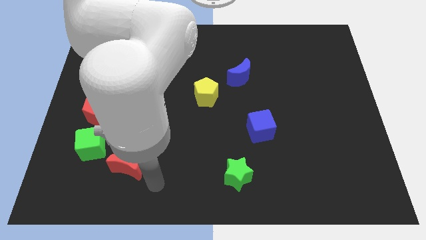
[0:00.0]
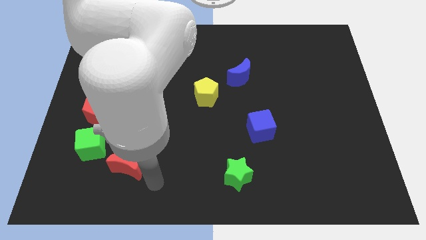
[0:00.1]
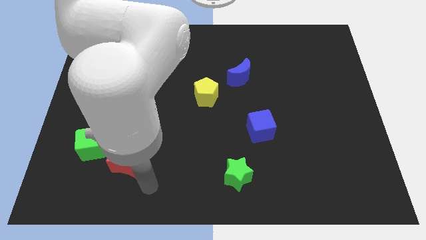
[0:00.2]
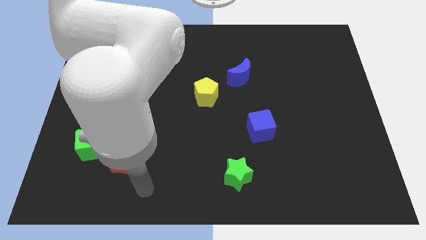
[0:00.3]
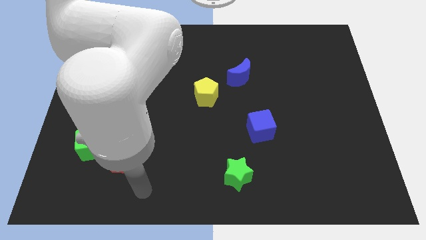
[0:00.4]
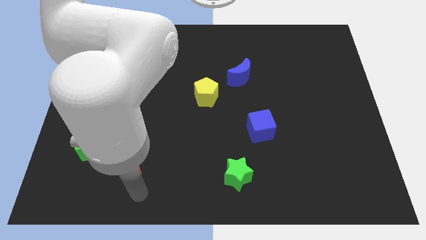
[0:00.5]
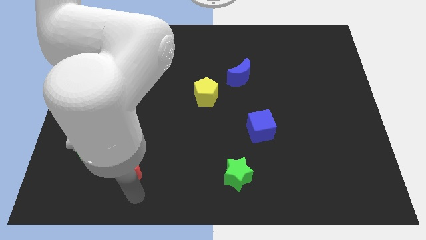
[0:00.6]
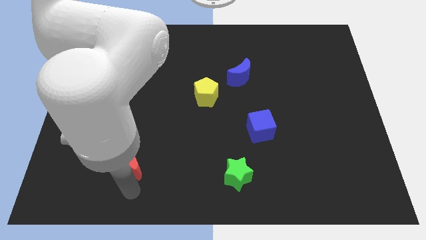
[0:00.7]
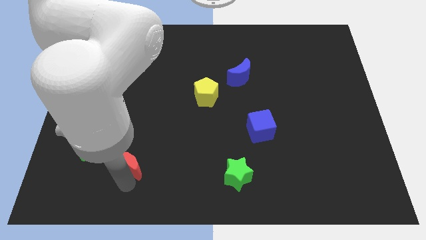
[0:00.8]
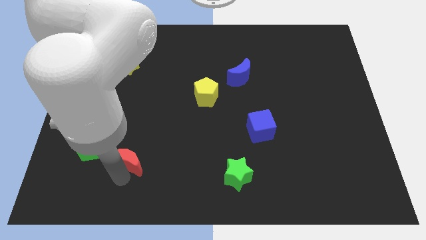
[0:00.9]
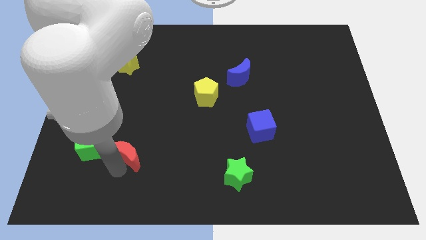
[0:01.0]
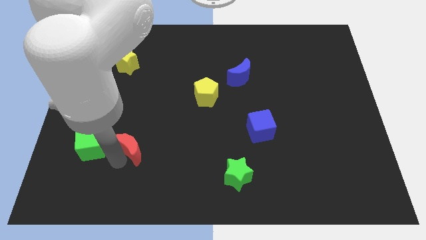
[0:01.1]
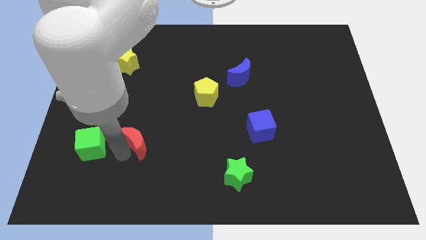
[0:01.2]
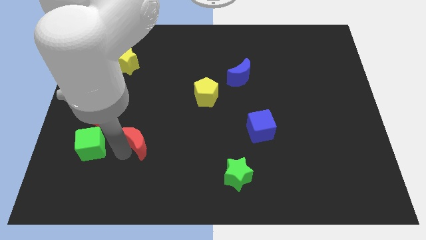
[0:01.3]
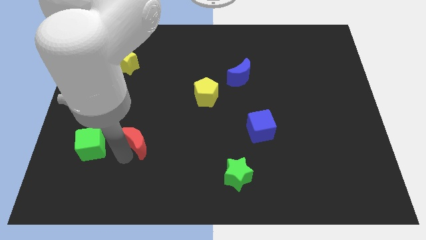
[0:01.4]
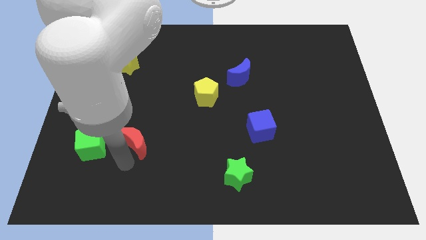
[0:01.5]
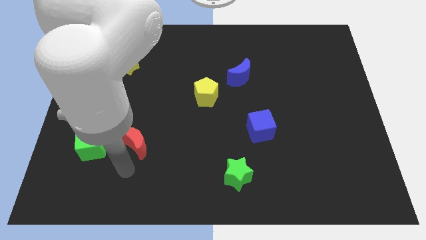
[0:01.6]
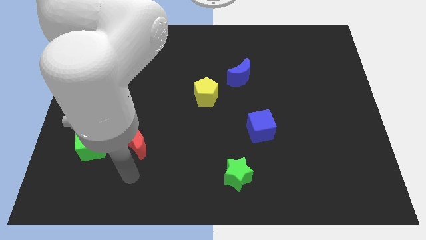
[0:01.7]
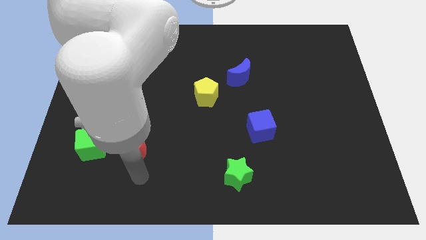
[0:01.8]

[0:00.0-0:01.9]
place red moon to the right of green cube

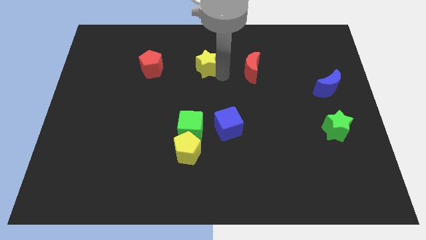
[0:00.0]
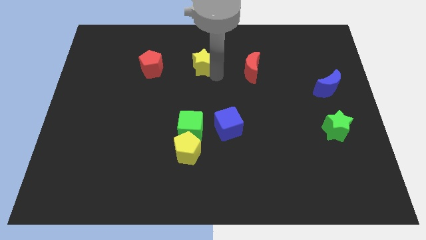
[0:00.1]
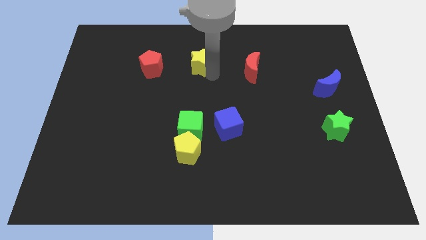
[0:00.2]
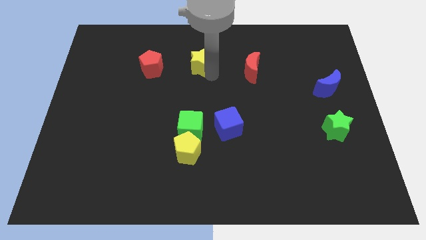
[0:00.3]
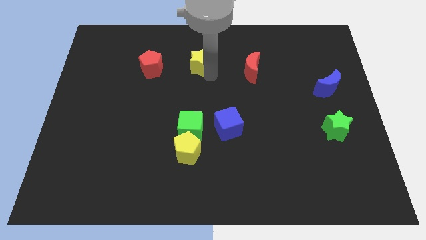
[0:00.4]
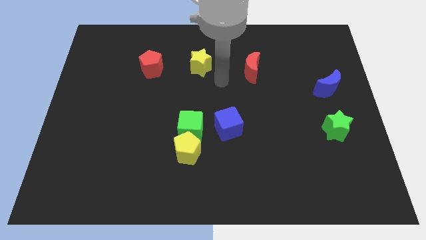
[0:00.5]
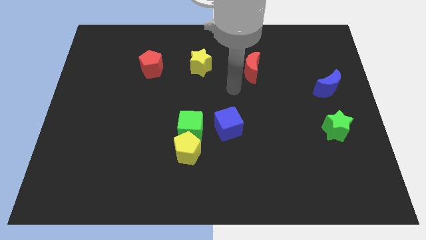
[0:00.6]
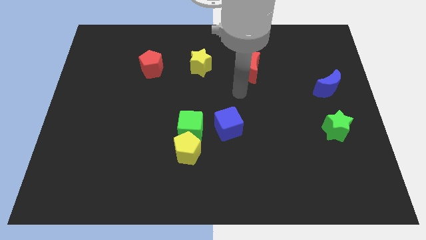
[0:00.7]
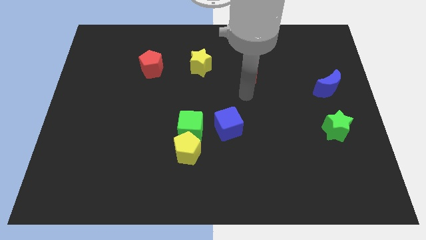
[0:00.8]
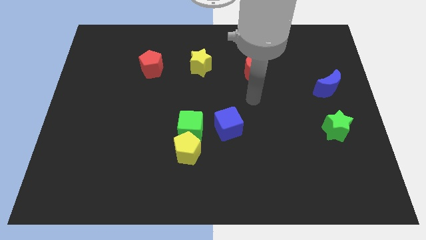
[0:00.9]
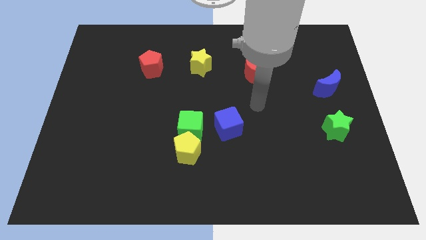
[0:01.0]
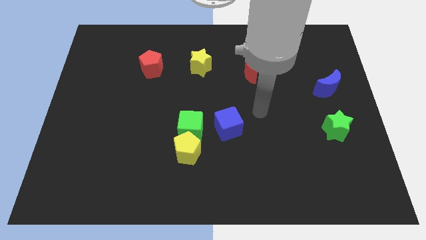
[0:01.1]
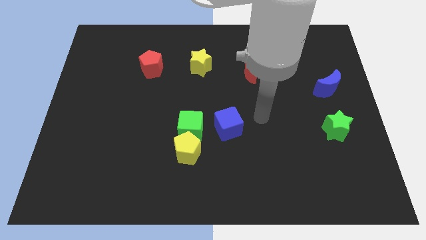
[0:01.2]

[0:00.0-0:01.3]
move the yellow star towards the red pentagon

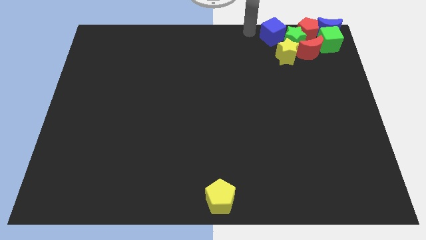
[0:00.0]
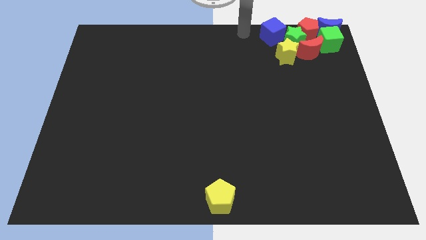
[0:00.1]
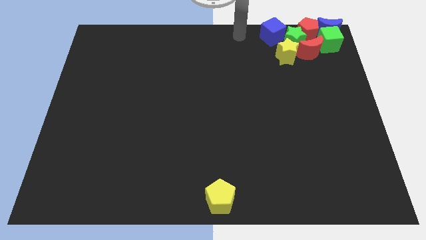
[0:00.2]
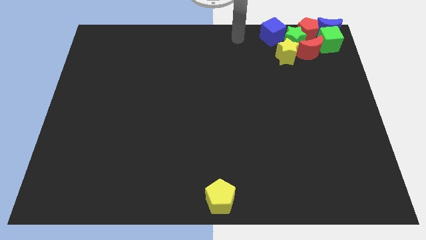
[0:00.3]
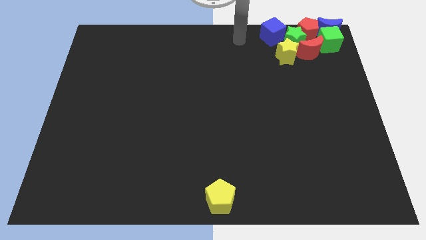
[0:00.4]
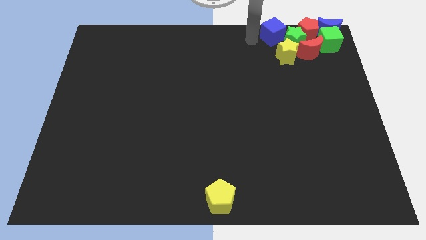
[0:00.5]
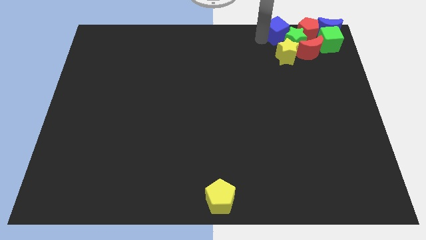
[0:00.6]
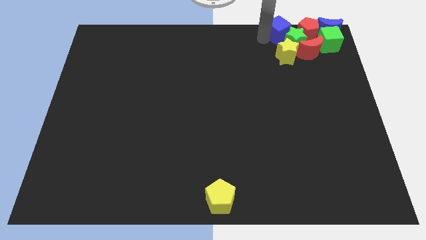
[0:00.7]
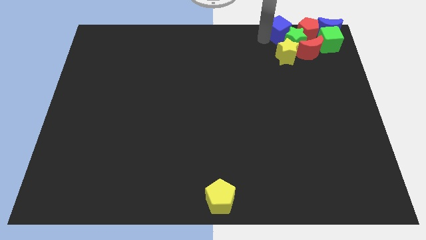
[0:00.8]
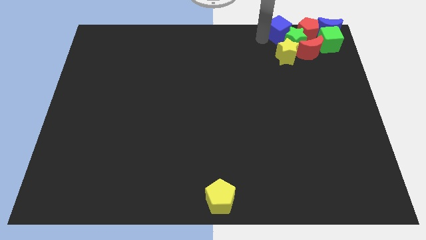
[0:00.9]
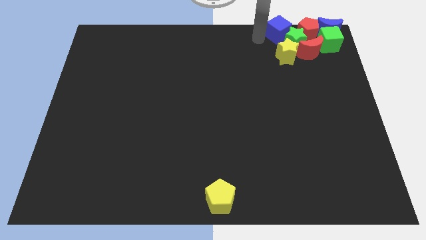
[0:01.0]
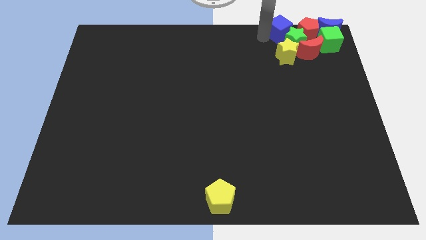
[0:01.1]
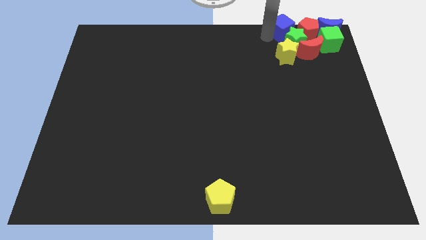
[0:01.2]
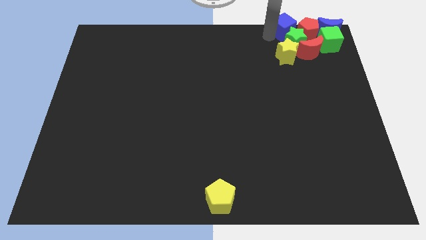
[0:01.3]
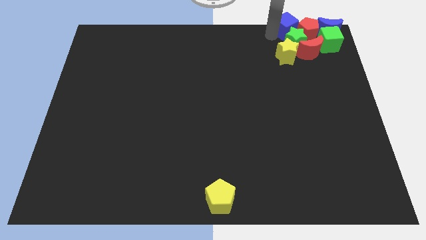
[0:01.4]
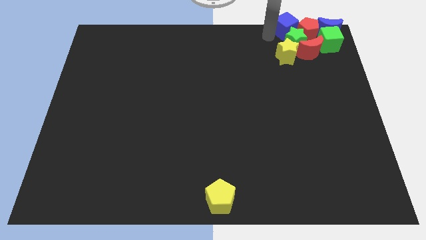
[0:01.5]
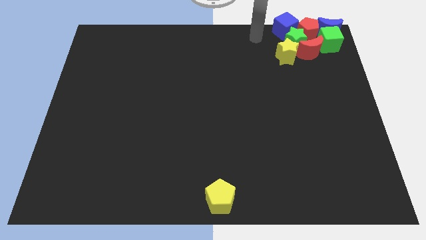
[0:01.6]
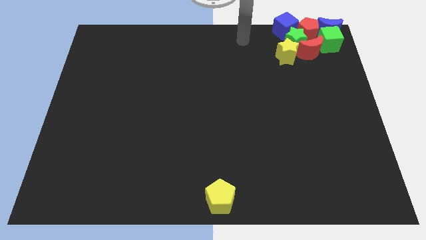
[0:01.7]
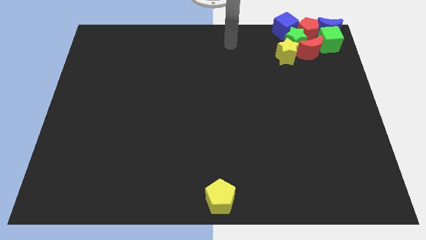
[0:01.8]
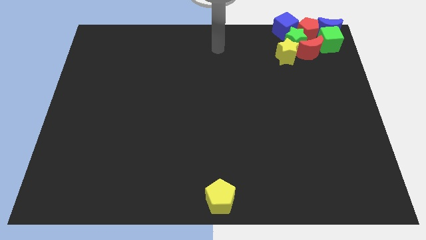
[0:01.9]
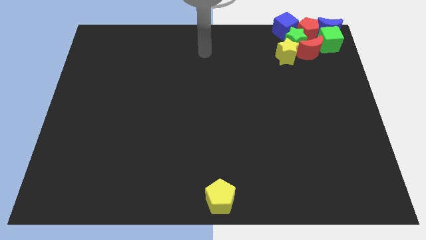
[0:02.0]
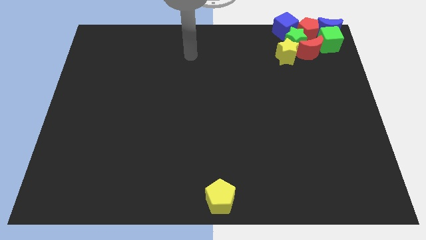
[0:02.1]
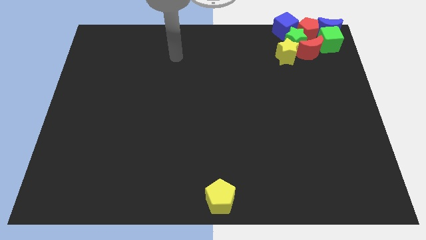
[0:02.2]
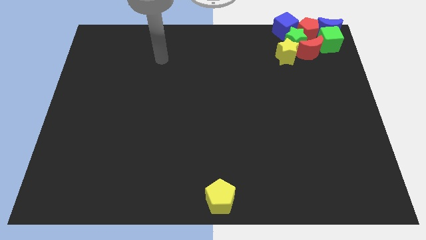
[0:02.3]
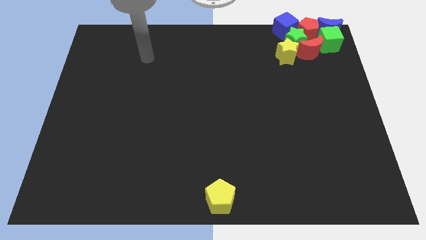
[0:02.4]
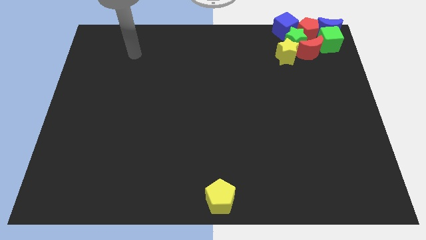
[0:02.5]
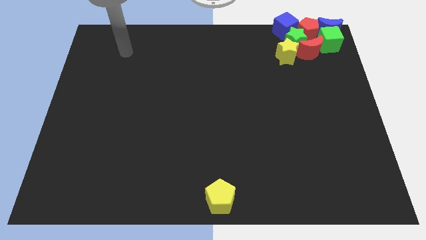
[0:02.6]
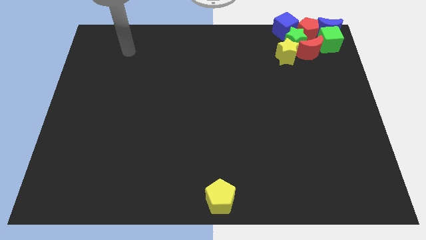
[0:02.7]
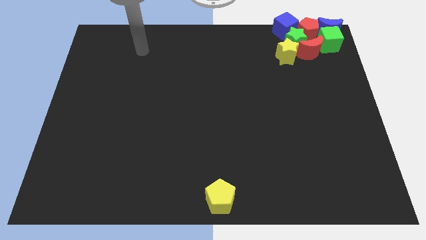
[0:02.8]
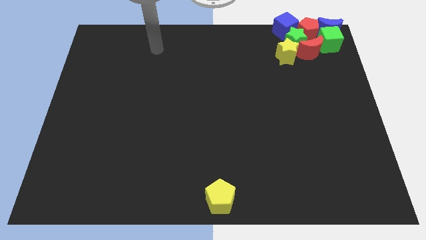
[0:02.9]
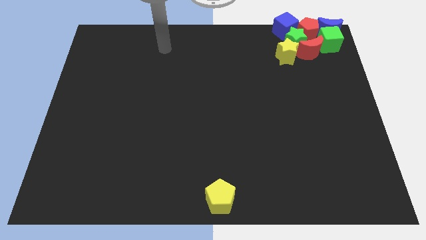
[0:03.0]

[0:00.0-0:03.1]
group up all the blocks except yellow pentagon

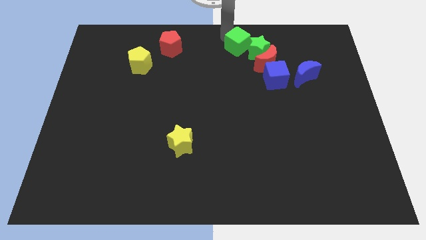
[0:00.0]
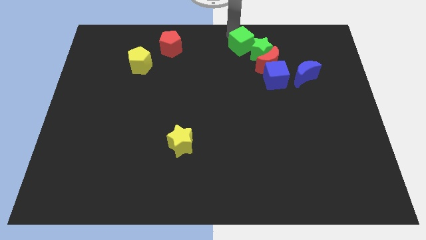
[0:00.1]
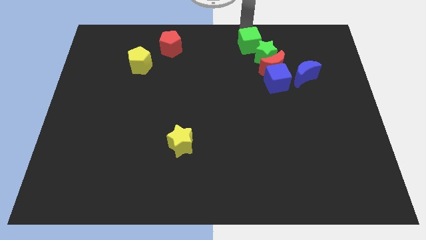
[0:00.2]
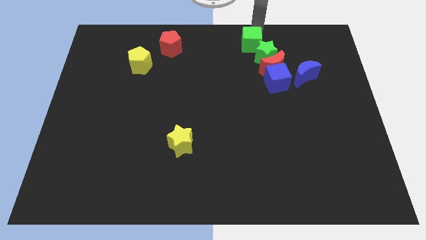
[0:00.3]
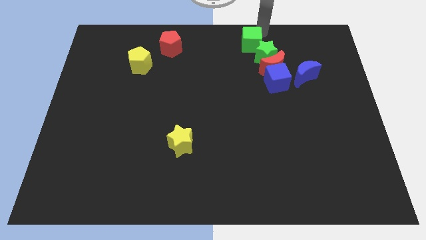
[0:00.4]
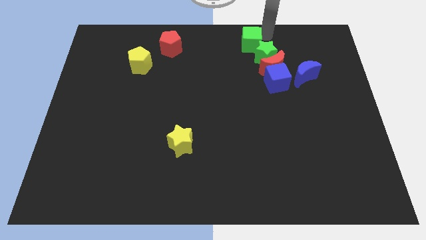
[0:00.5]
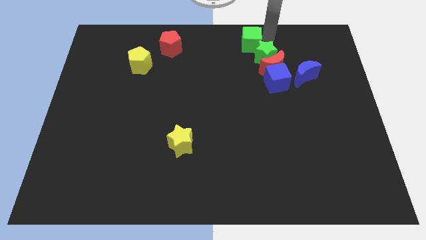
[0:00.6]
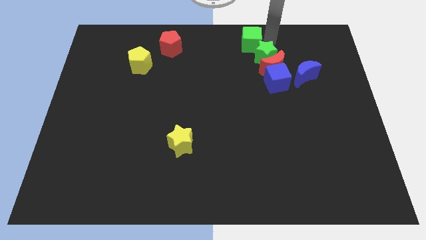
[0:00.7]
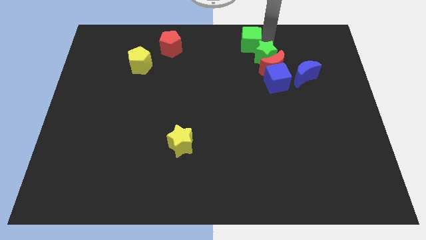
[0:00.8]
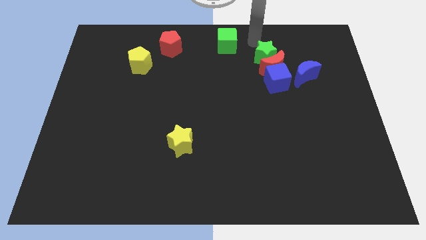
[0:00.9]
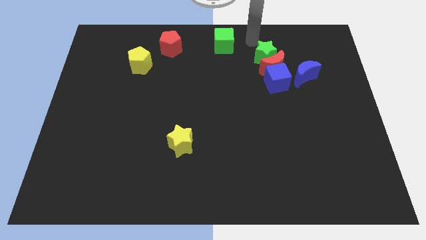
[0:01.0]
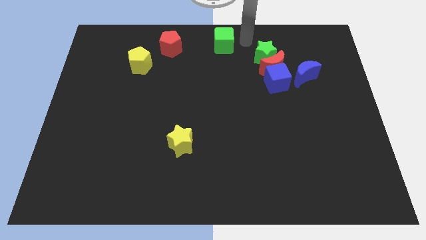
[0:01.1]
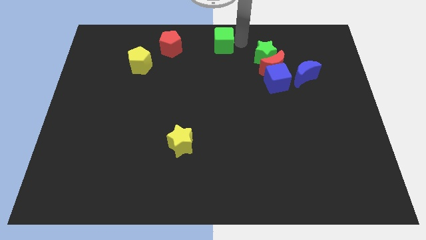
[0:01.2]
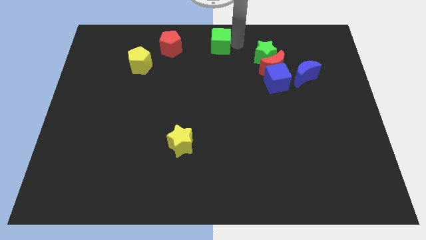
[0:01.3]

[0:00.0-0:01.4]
place the green cube parallel to red pentagon

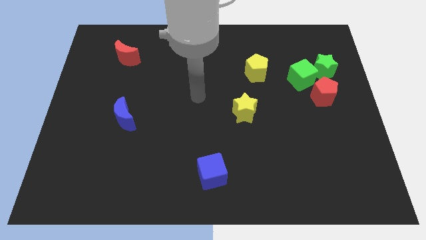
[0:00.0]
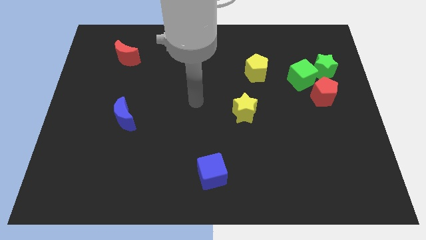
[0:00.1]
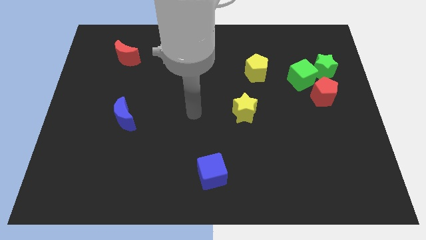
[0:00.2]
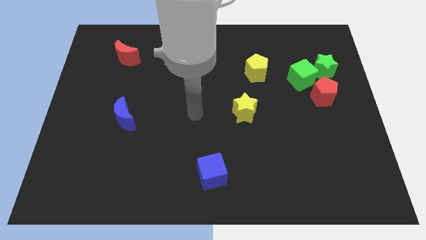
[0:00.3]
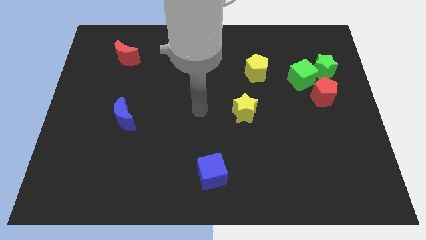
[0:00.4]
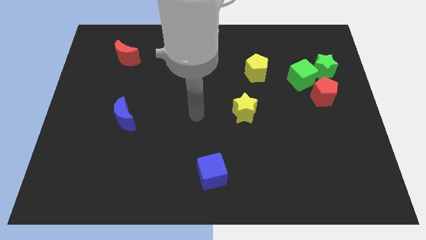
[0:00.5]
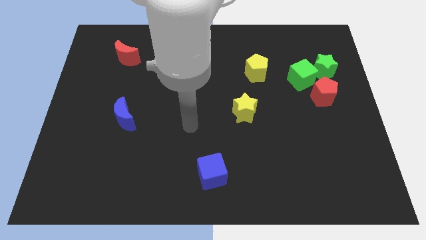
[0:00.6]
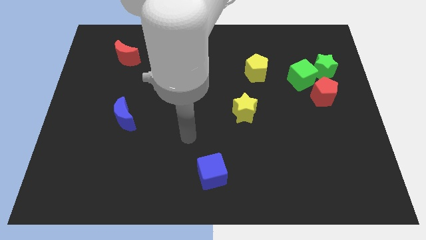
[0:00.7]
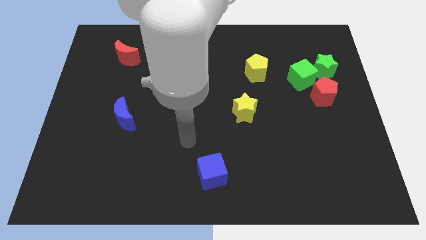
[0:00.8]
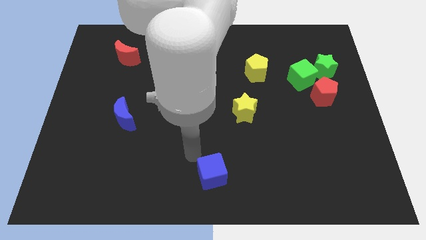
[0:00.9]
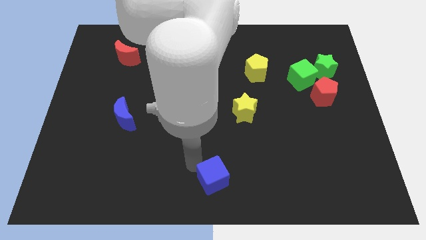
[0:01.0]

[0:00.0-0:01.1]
touch the blue cube
